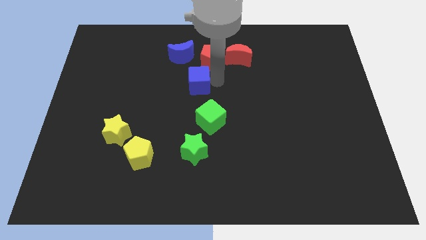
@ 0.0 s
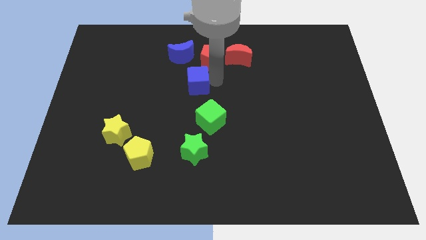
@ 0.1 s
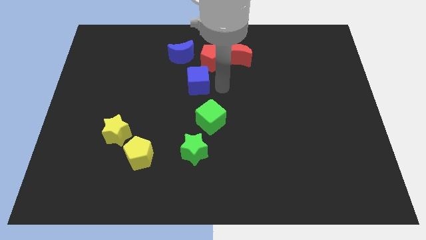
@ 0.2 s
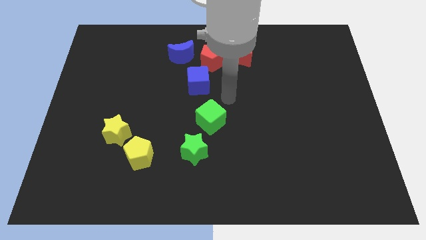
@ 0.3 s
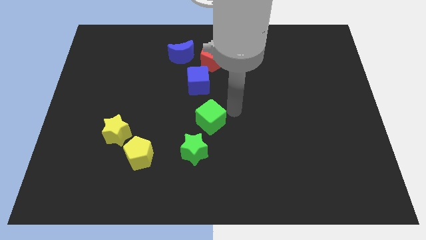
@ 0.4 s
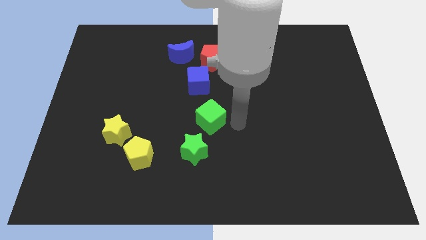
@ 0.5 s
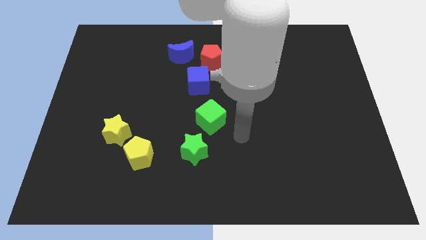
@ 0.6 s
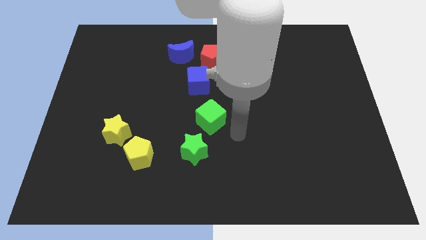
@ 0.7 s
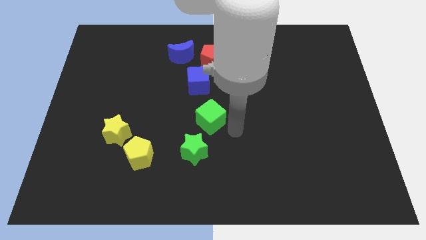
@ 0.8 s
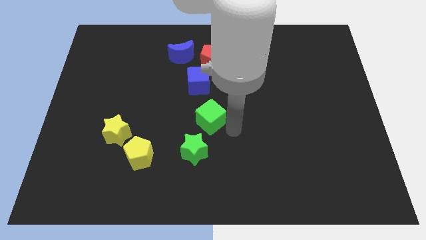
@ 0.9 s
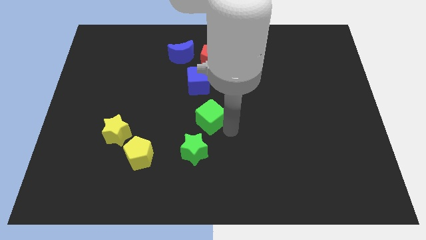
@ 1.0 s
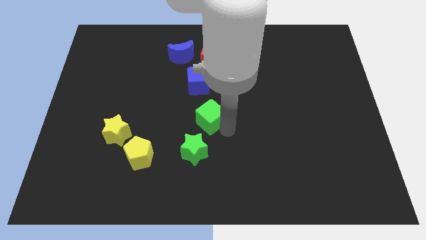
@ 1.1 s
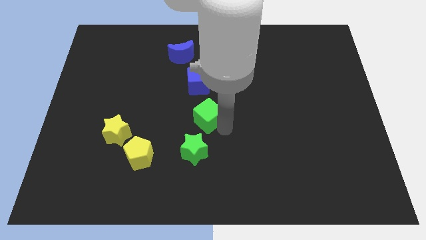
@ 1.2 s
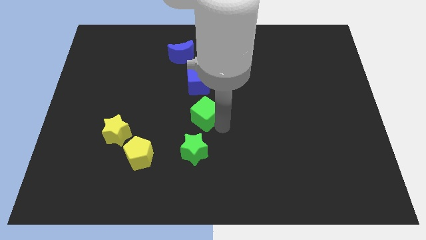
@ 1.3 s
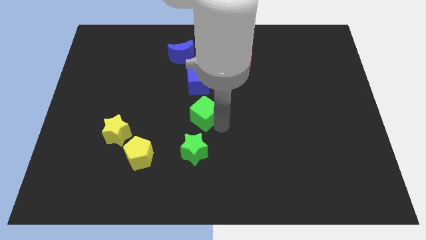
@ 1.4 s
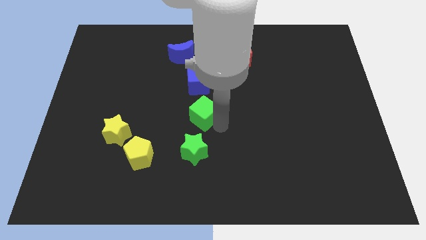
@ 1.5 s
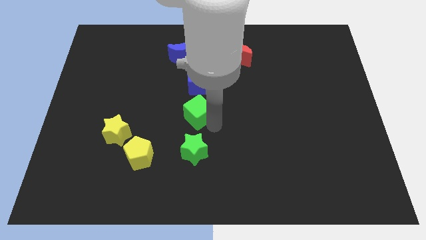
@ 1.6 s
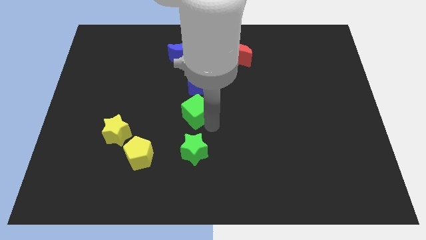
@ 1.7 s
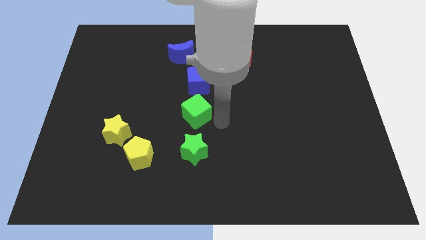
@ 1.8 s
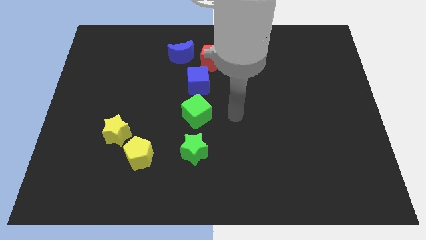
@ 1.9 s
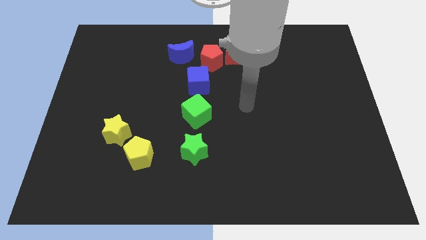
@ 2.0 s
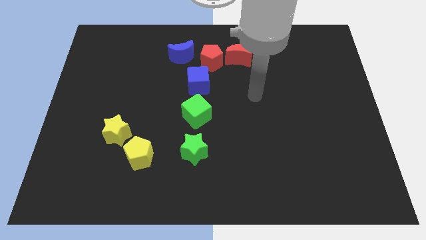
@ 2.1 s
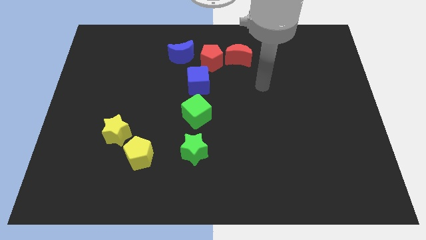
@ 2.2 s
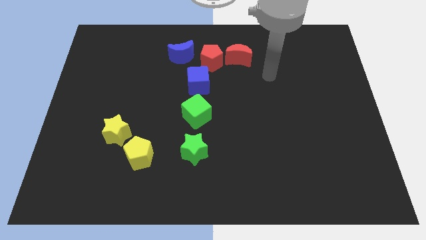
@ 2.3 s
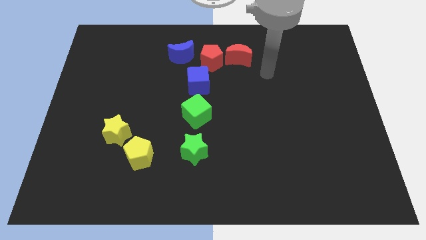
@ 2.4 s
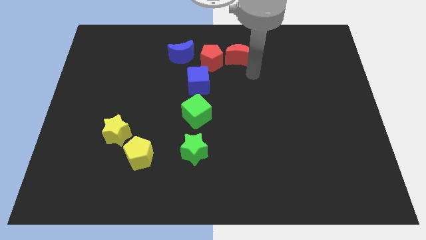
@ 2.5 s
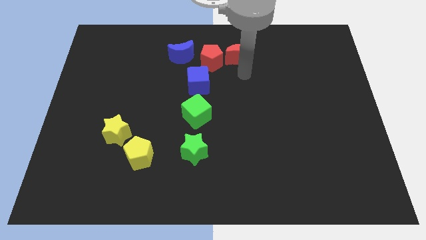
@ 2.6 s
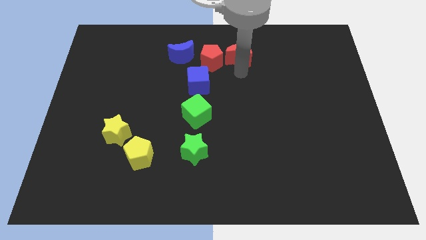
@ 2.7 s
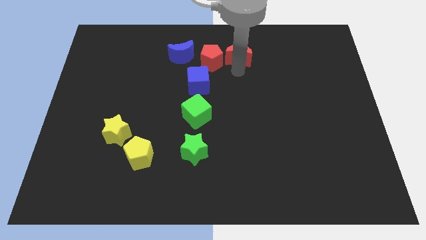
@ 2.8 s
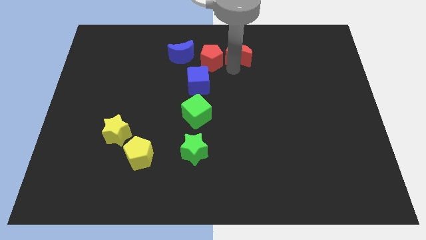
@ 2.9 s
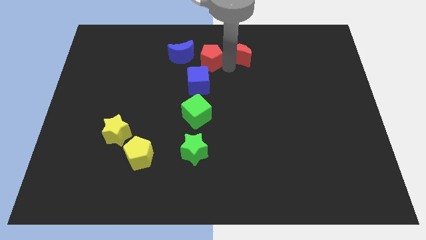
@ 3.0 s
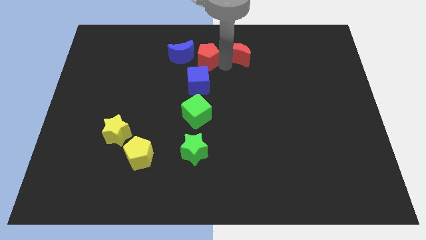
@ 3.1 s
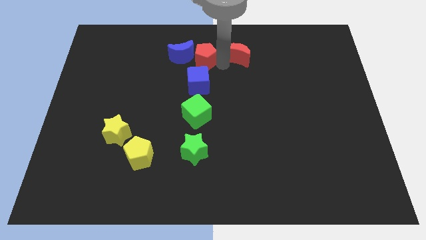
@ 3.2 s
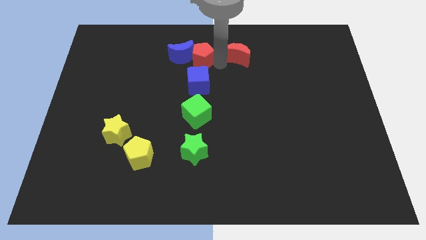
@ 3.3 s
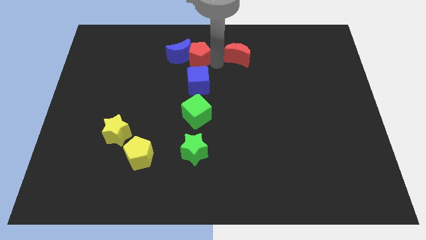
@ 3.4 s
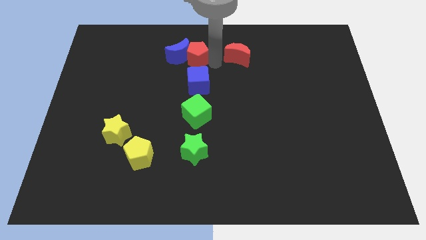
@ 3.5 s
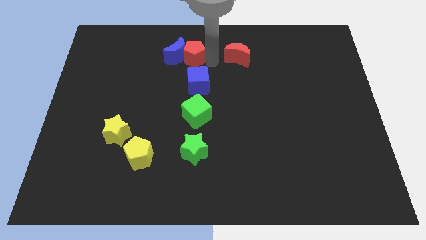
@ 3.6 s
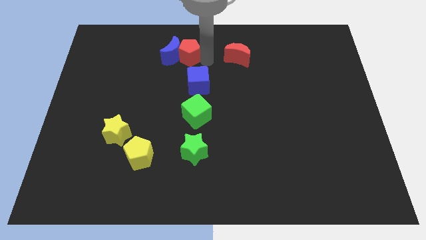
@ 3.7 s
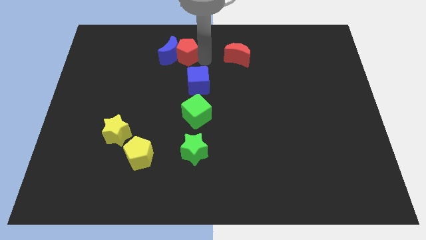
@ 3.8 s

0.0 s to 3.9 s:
separate the red moon and red pentagon

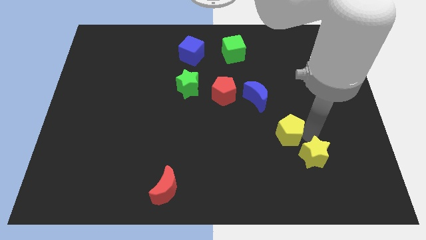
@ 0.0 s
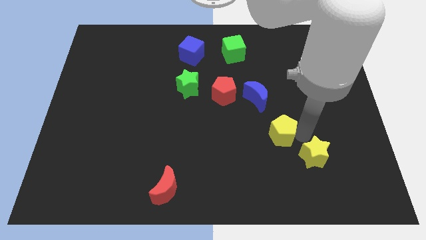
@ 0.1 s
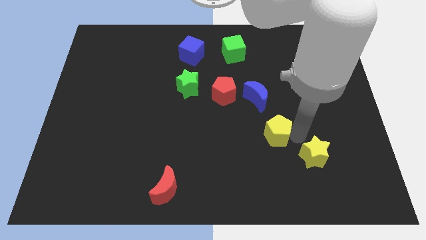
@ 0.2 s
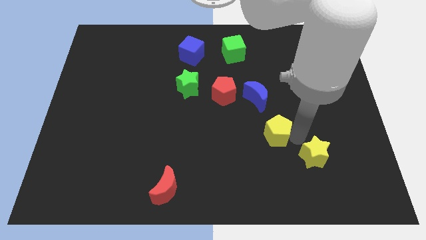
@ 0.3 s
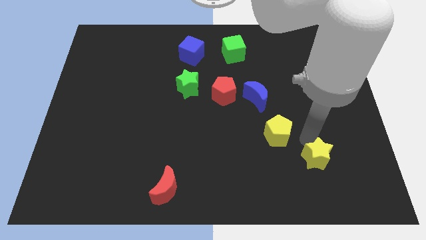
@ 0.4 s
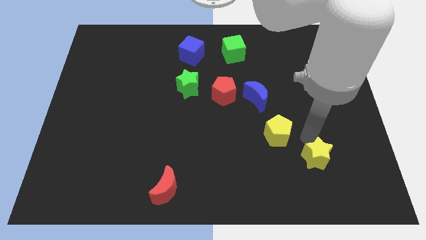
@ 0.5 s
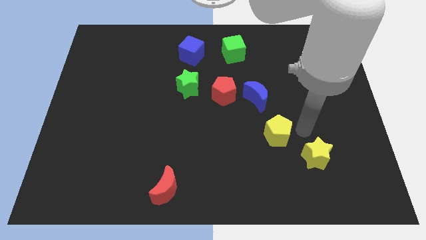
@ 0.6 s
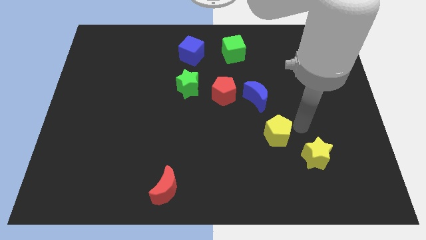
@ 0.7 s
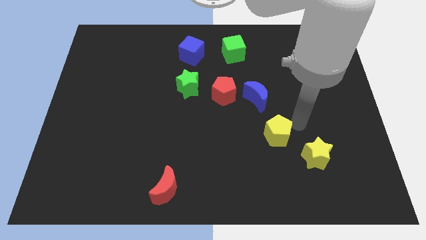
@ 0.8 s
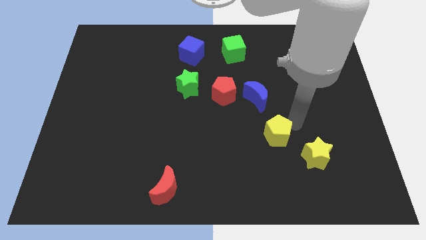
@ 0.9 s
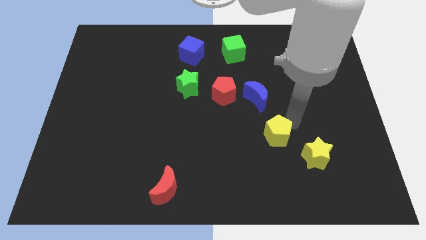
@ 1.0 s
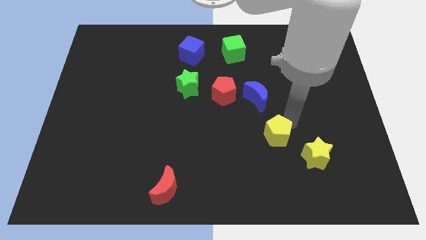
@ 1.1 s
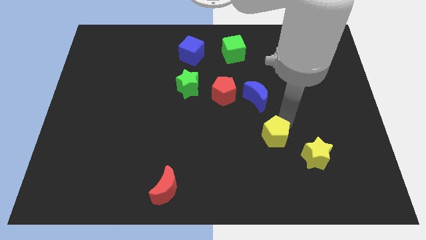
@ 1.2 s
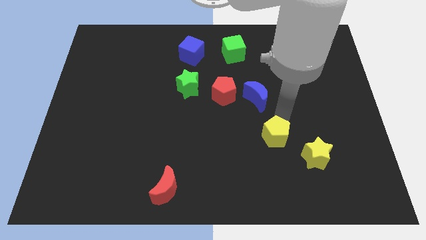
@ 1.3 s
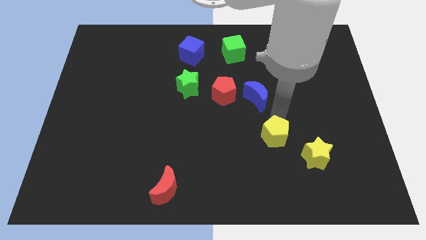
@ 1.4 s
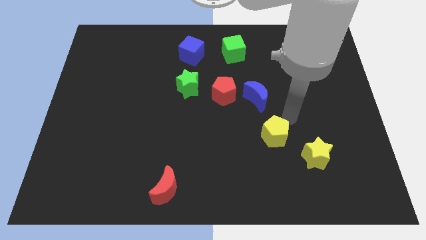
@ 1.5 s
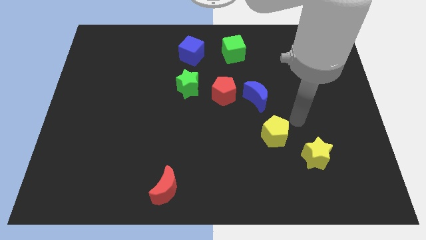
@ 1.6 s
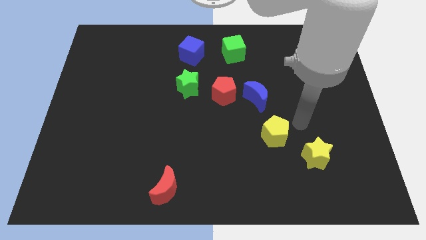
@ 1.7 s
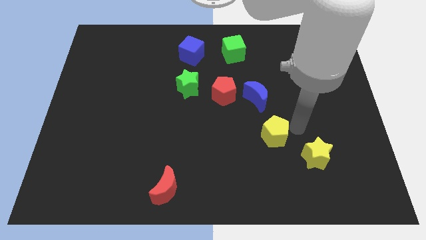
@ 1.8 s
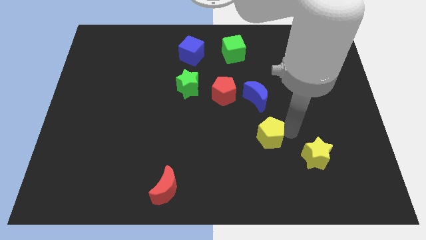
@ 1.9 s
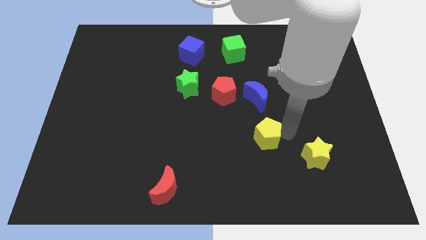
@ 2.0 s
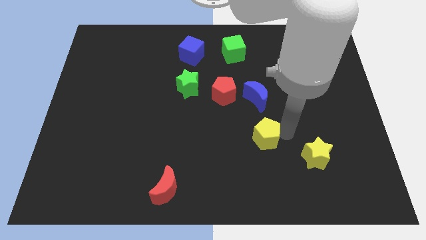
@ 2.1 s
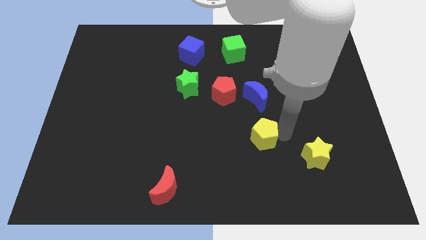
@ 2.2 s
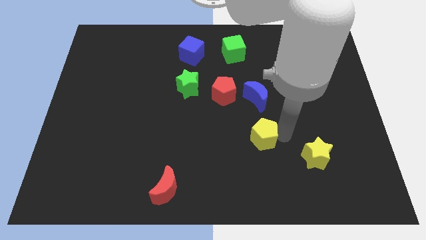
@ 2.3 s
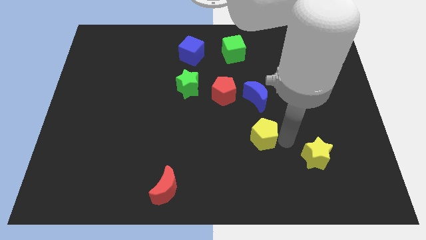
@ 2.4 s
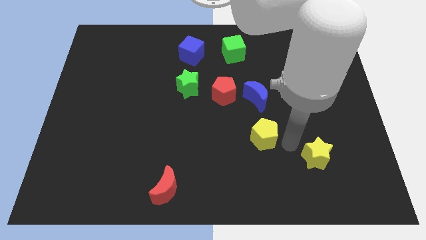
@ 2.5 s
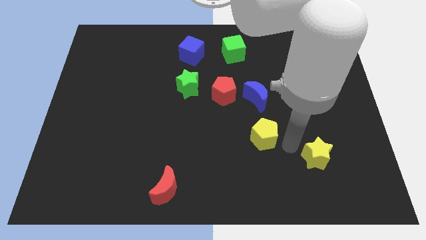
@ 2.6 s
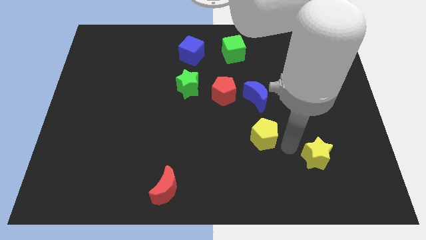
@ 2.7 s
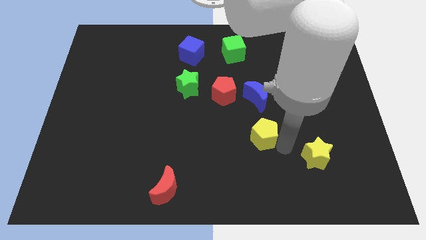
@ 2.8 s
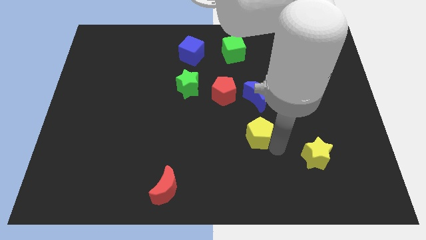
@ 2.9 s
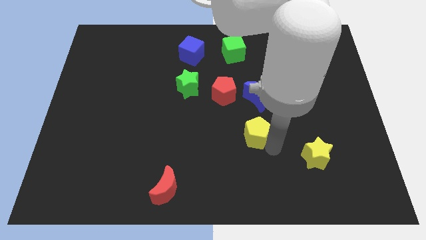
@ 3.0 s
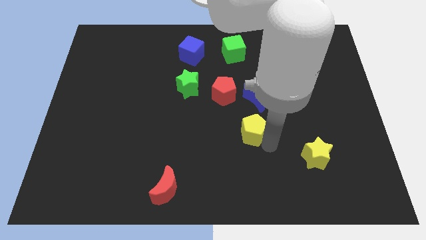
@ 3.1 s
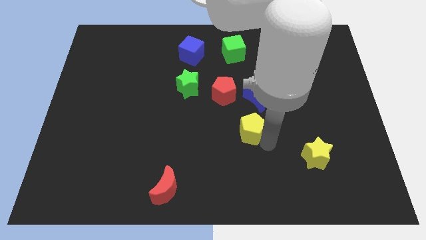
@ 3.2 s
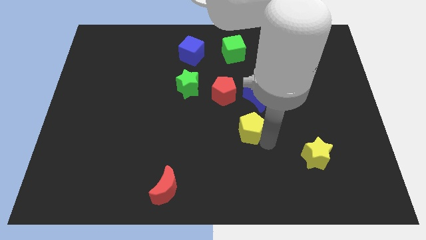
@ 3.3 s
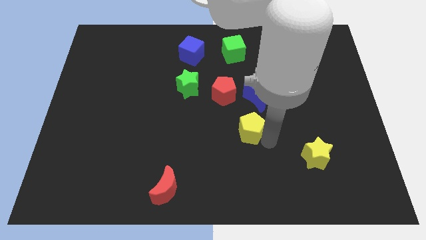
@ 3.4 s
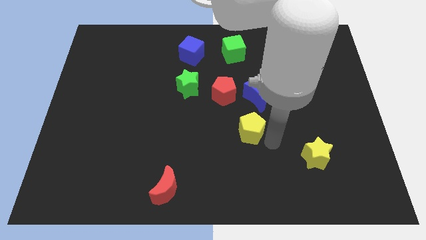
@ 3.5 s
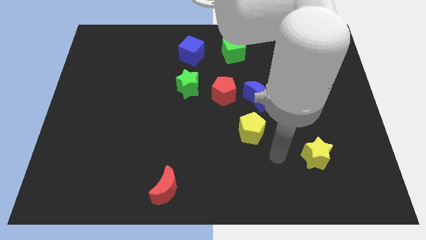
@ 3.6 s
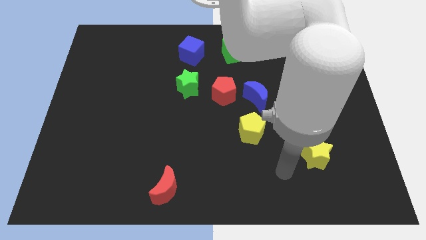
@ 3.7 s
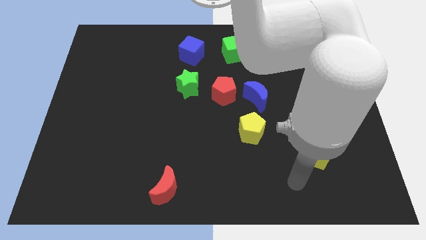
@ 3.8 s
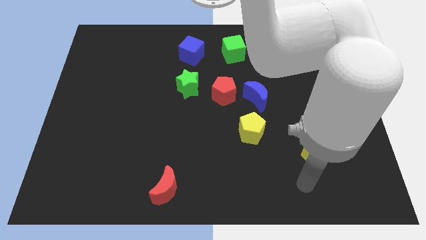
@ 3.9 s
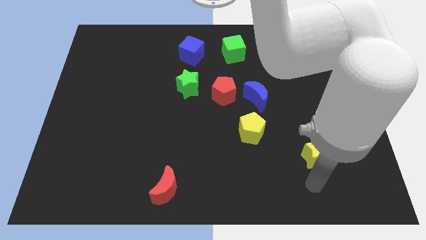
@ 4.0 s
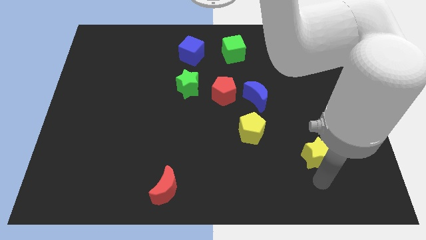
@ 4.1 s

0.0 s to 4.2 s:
place the yellow pentagon below the blue crescent

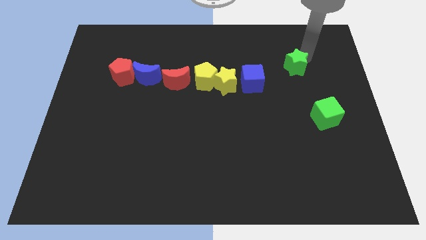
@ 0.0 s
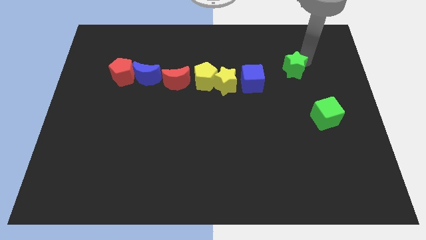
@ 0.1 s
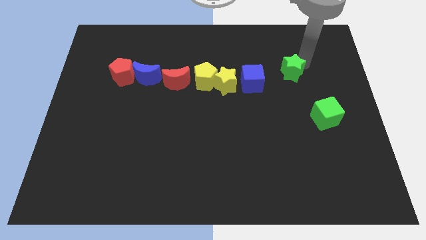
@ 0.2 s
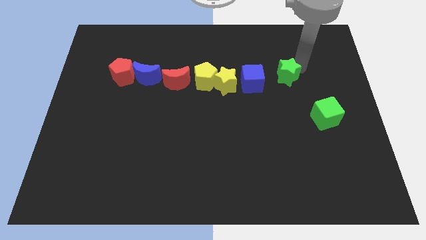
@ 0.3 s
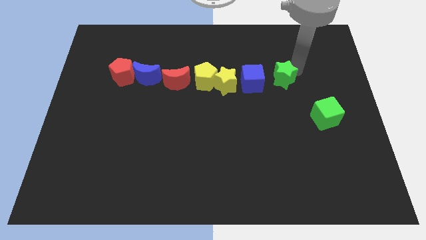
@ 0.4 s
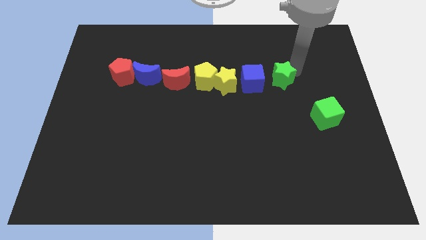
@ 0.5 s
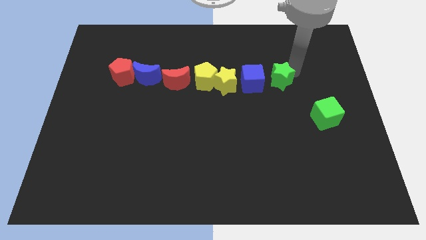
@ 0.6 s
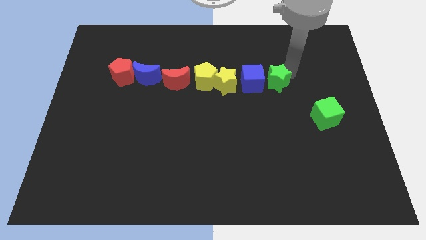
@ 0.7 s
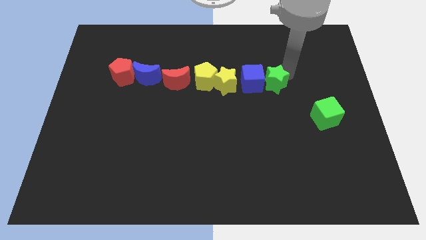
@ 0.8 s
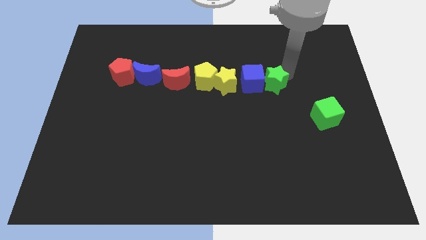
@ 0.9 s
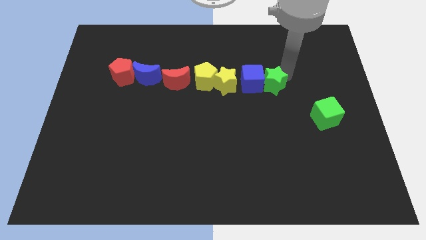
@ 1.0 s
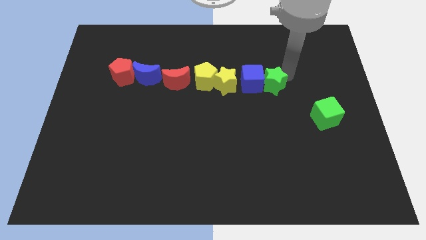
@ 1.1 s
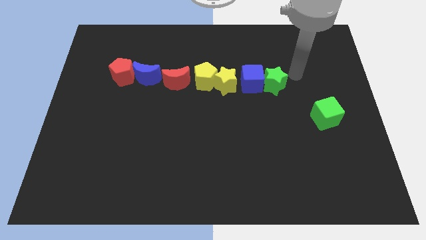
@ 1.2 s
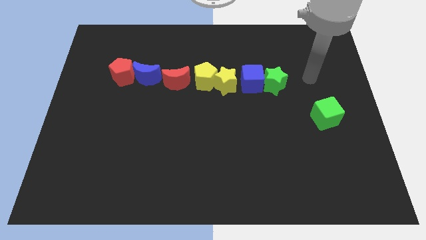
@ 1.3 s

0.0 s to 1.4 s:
push the green star to the right of the blue cube
